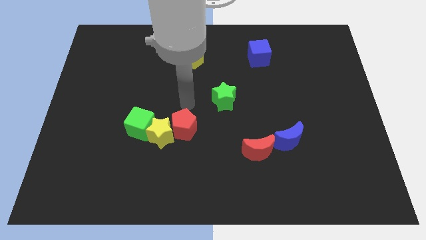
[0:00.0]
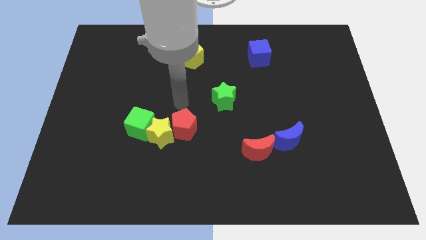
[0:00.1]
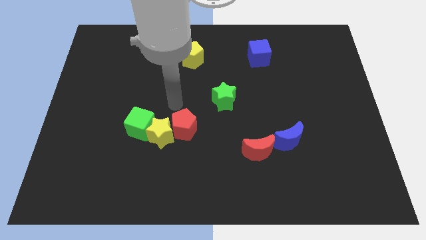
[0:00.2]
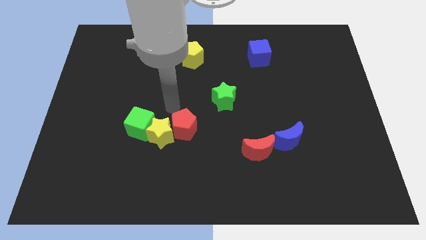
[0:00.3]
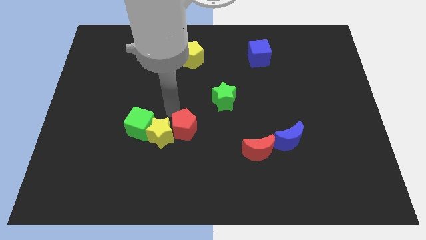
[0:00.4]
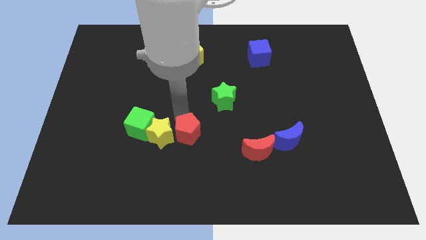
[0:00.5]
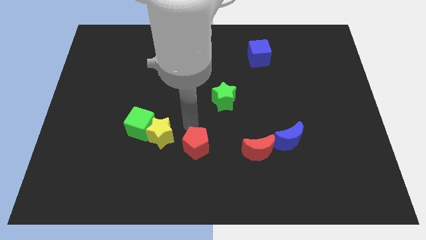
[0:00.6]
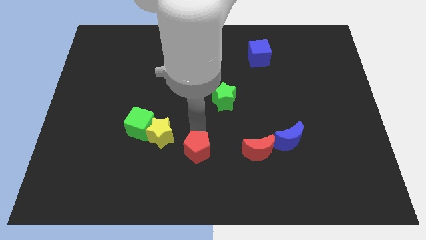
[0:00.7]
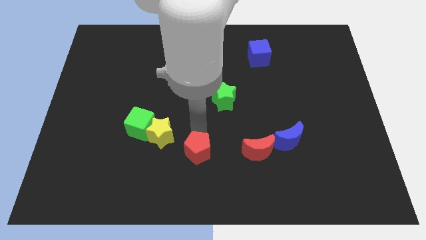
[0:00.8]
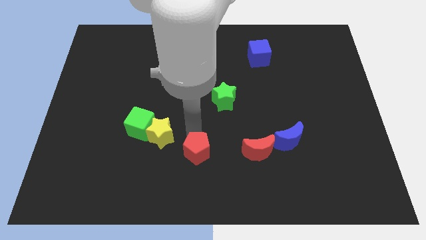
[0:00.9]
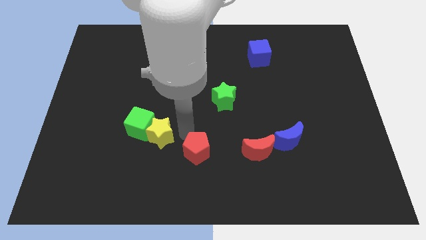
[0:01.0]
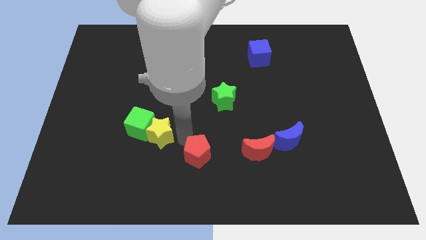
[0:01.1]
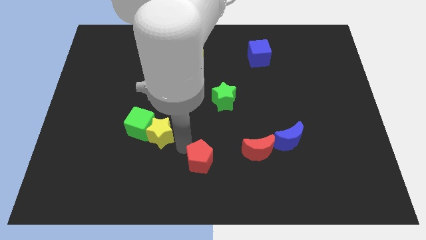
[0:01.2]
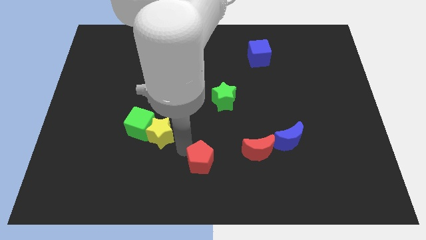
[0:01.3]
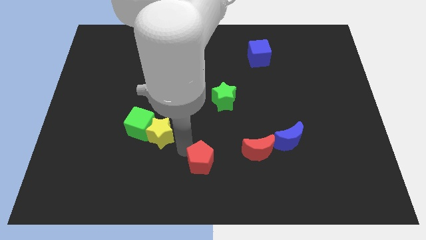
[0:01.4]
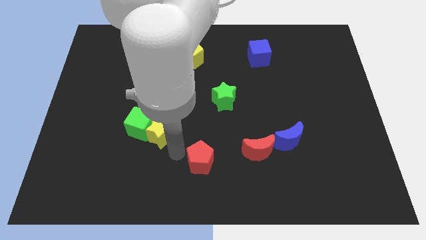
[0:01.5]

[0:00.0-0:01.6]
move the red pentagon away from the yellow star

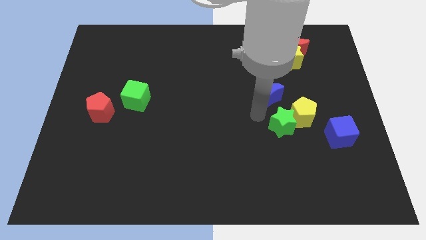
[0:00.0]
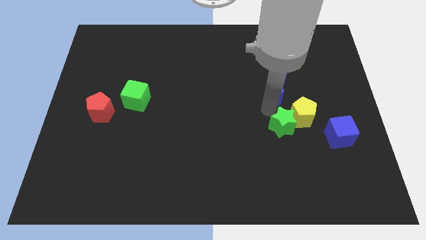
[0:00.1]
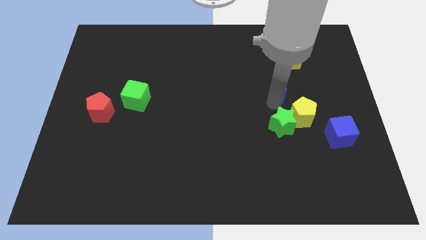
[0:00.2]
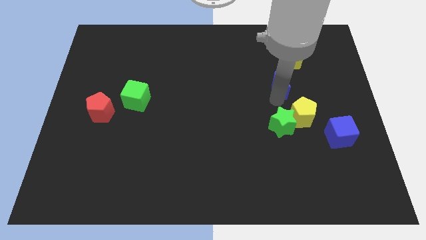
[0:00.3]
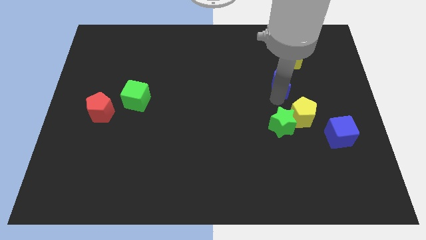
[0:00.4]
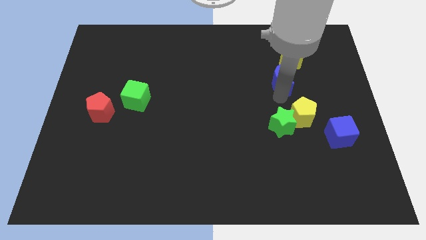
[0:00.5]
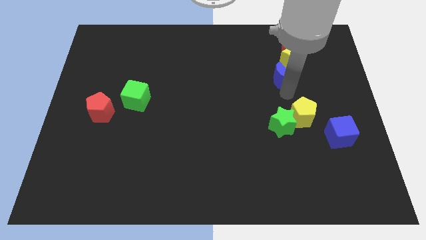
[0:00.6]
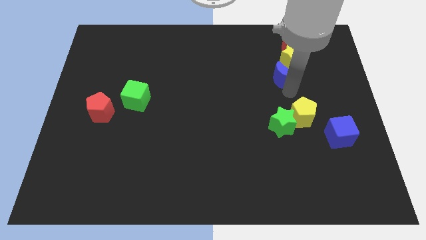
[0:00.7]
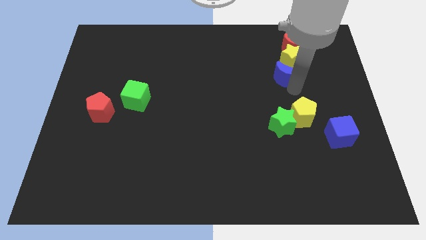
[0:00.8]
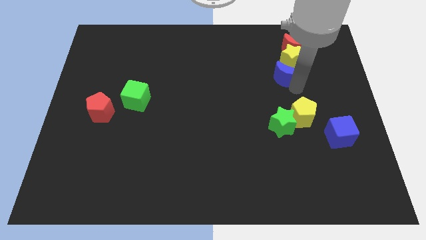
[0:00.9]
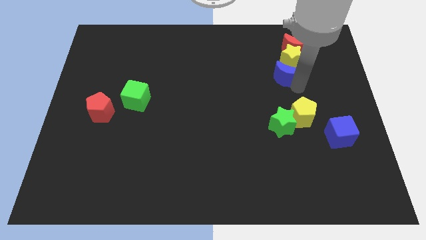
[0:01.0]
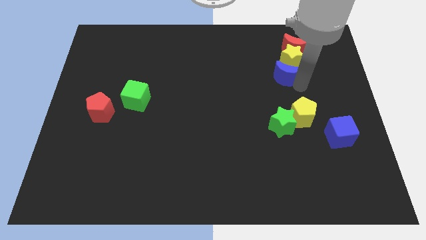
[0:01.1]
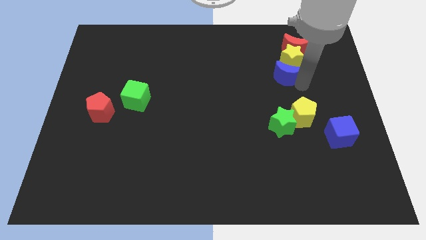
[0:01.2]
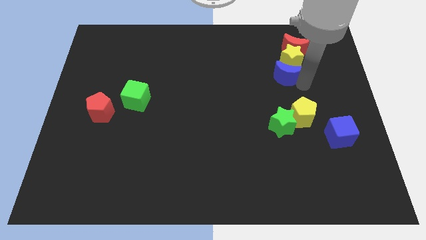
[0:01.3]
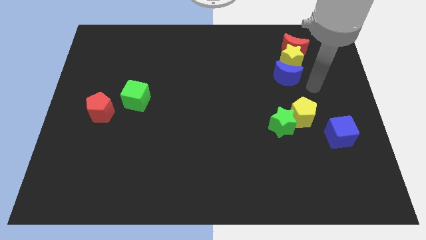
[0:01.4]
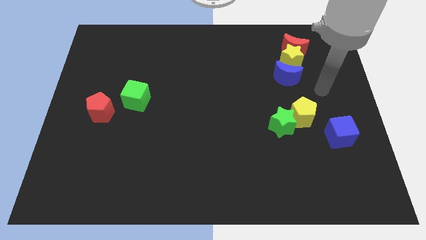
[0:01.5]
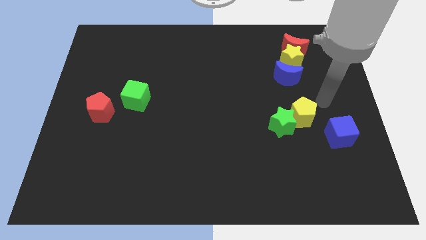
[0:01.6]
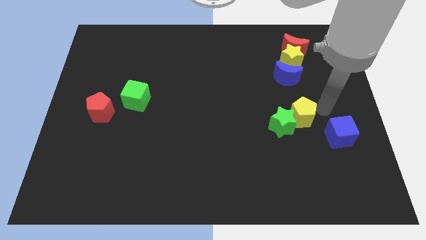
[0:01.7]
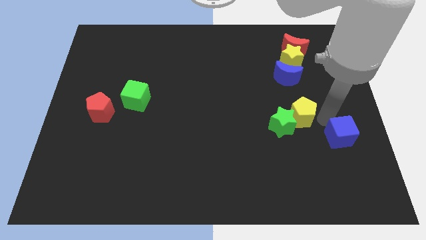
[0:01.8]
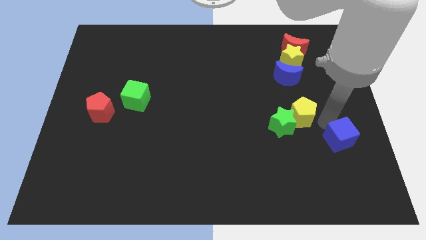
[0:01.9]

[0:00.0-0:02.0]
push the blue moon into the yellow star

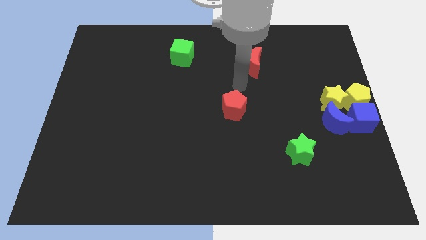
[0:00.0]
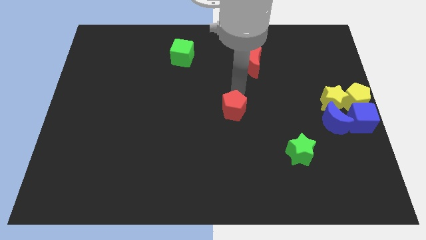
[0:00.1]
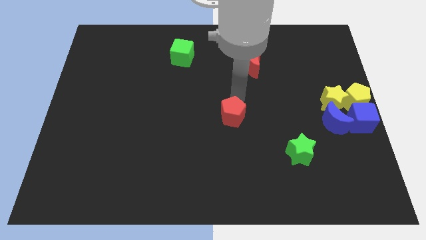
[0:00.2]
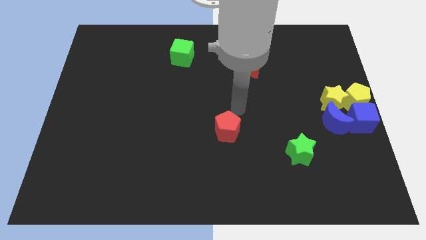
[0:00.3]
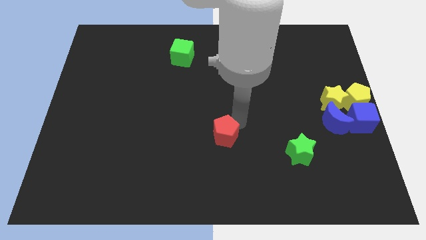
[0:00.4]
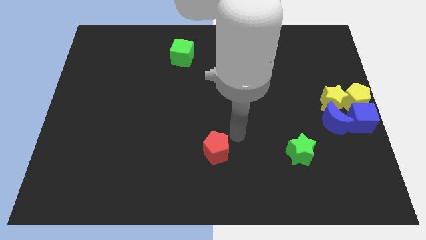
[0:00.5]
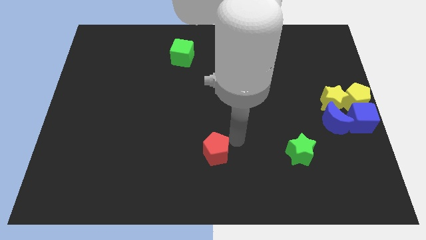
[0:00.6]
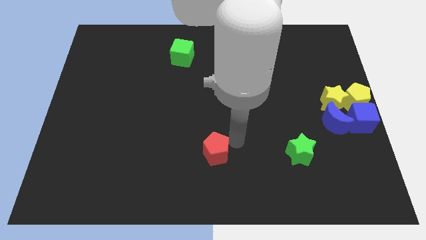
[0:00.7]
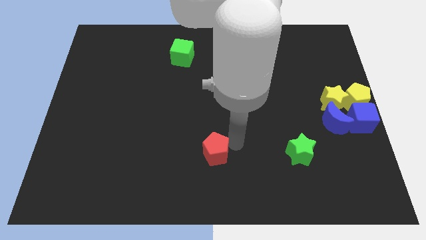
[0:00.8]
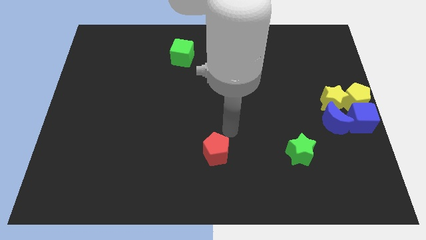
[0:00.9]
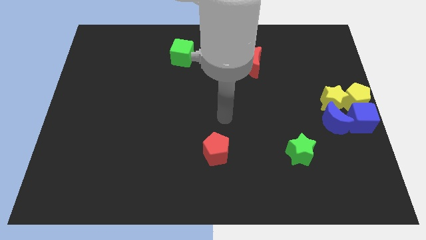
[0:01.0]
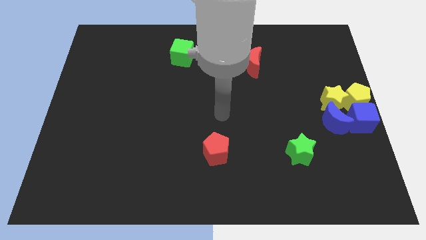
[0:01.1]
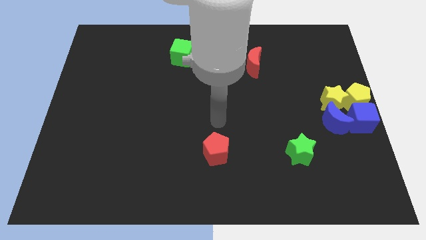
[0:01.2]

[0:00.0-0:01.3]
move the red pentagon parallel left to the green star

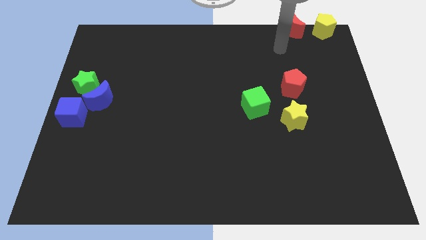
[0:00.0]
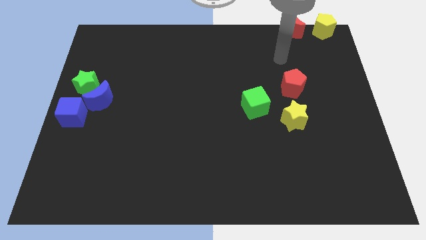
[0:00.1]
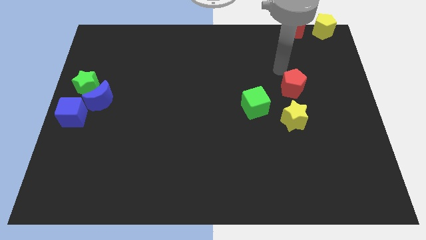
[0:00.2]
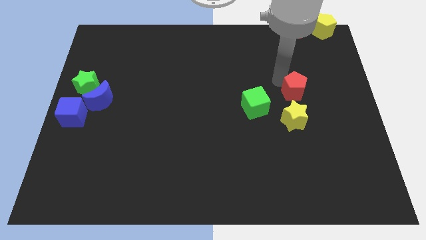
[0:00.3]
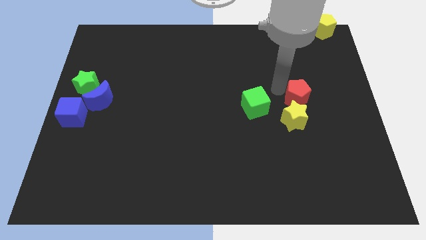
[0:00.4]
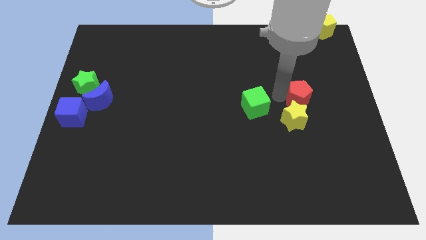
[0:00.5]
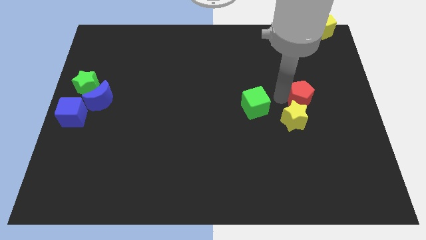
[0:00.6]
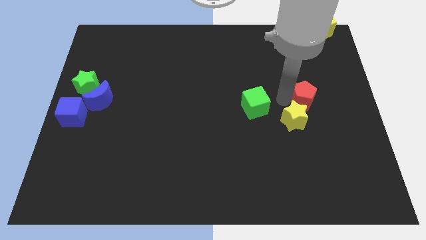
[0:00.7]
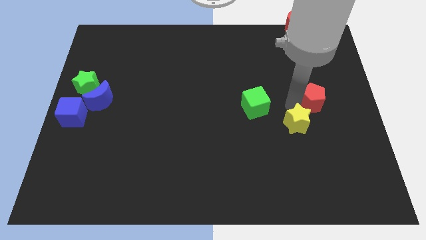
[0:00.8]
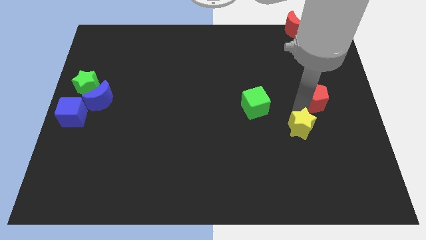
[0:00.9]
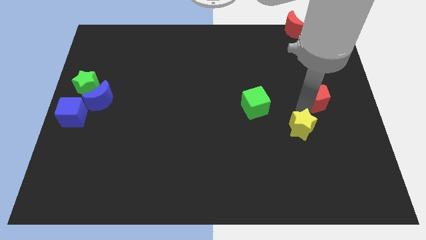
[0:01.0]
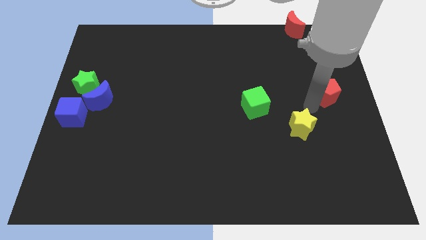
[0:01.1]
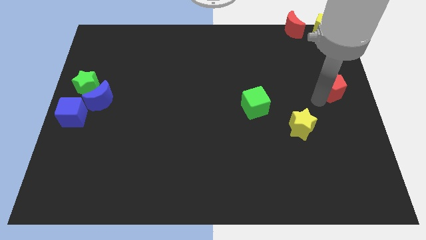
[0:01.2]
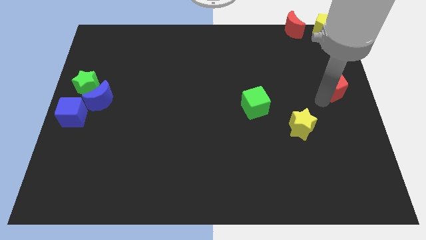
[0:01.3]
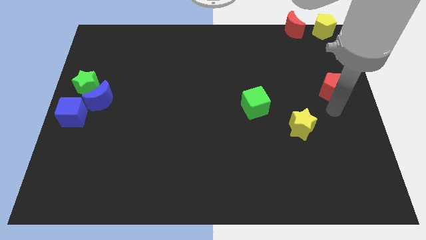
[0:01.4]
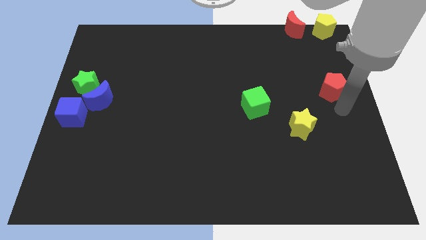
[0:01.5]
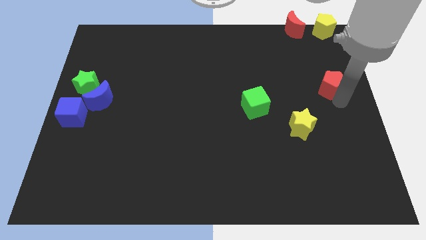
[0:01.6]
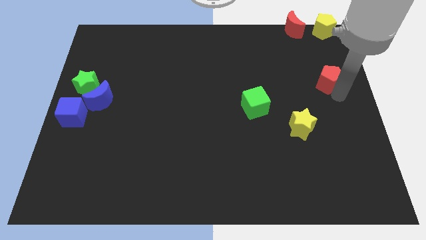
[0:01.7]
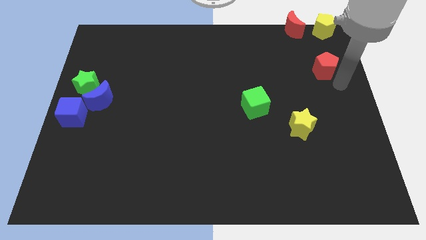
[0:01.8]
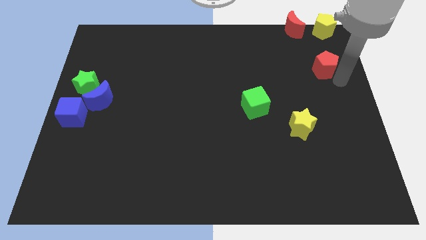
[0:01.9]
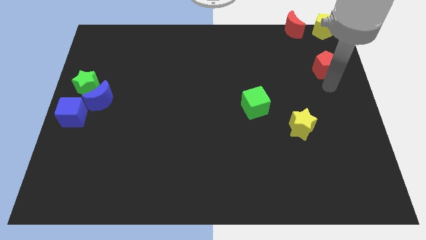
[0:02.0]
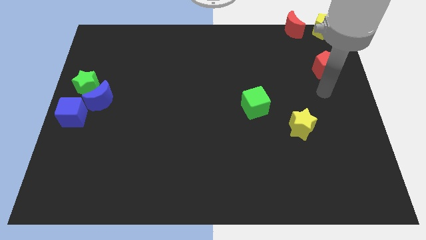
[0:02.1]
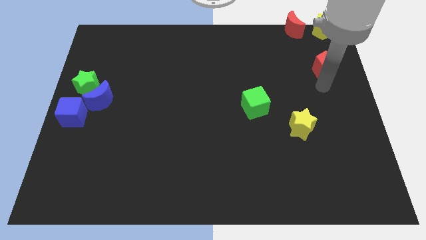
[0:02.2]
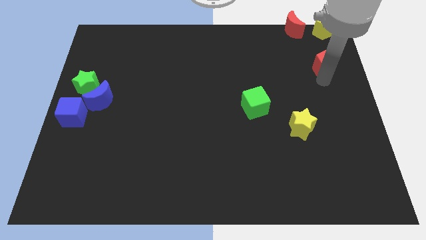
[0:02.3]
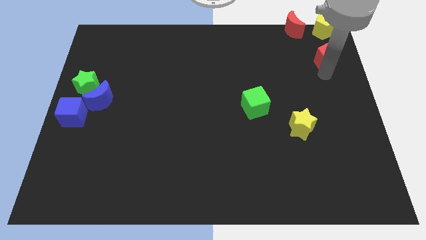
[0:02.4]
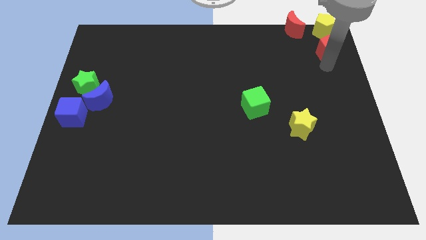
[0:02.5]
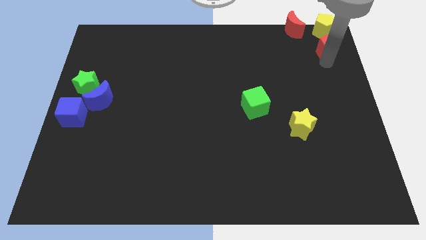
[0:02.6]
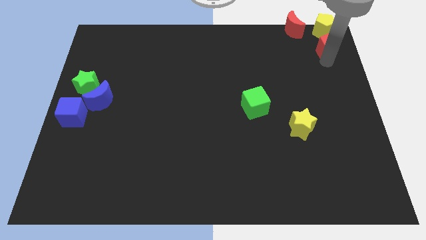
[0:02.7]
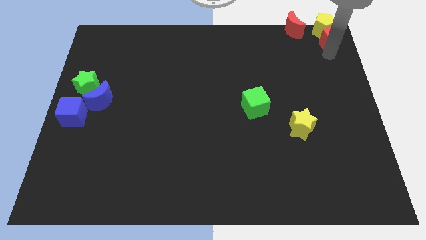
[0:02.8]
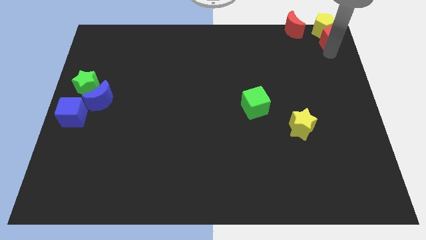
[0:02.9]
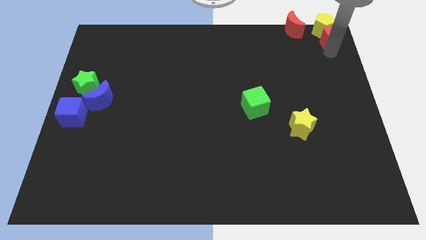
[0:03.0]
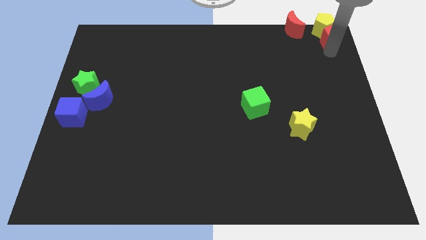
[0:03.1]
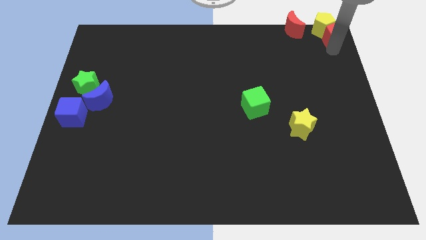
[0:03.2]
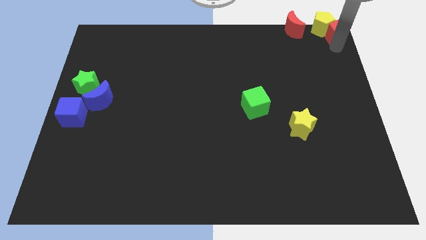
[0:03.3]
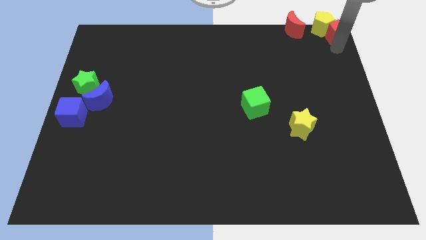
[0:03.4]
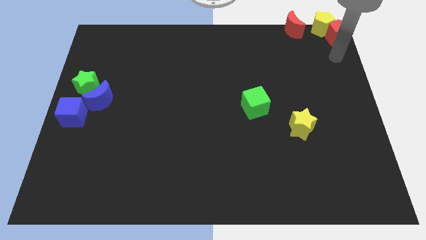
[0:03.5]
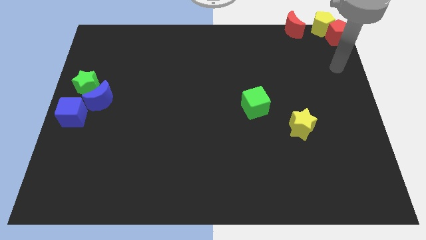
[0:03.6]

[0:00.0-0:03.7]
place the red pentagon to the bottom right side of the yellow pentagon

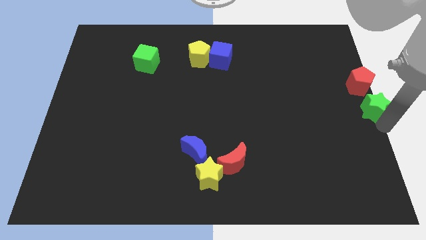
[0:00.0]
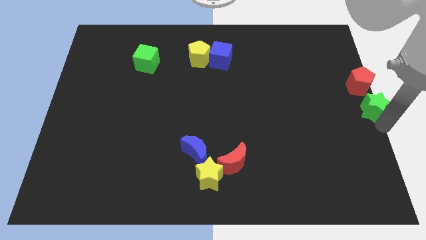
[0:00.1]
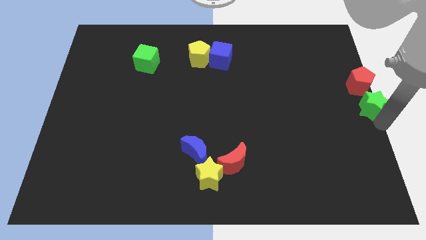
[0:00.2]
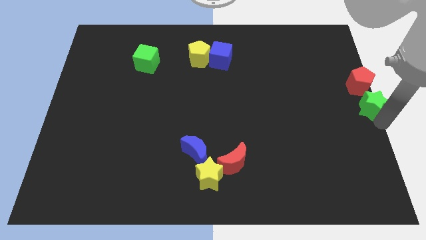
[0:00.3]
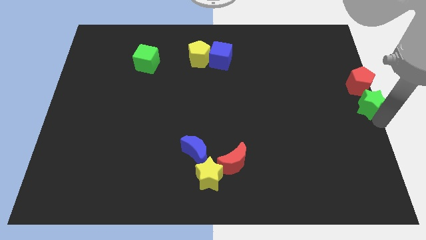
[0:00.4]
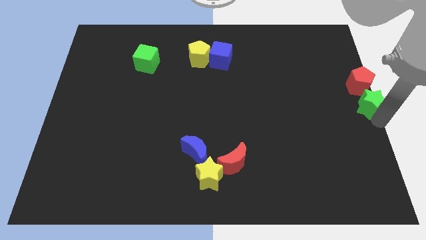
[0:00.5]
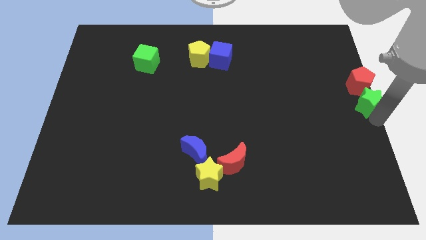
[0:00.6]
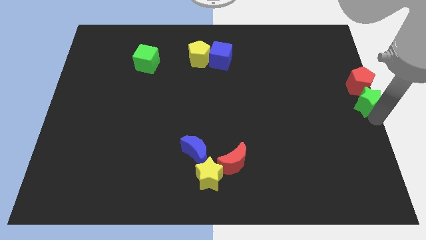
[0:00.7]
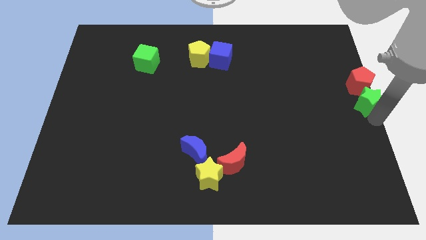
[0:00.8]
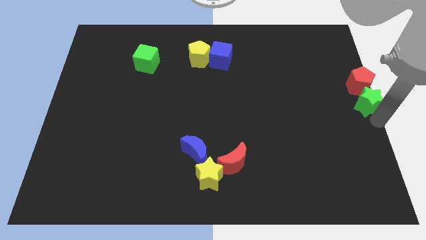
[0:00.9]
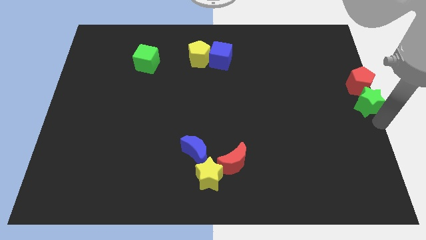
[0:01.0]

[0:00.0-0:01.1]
move green star close to red pentagon
